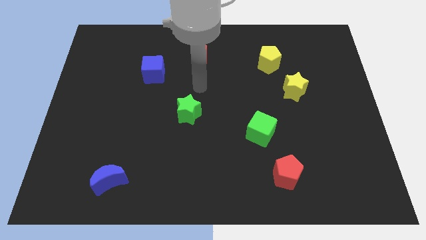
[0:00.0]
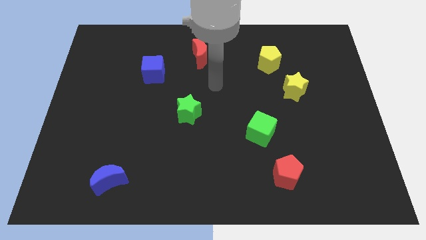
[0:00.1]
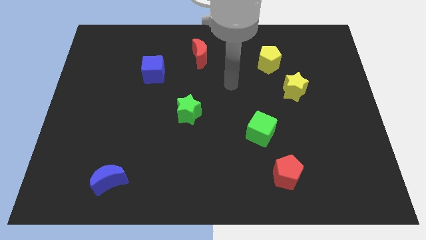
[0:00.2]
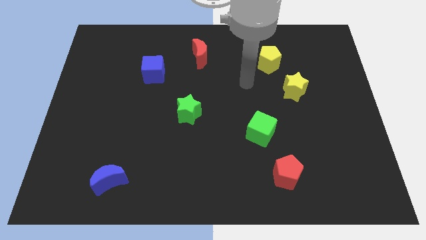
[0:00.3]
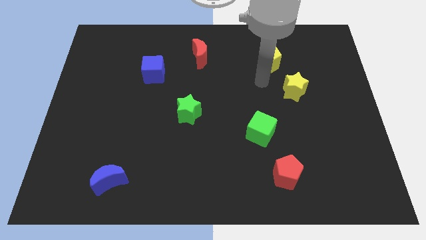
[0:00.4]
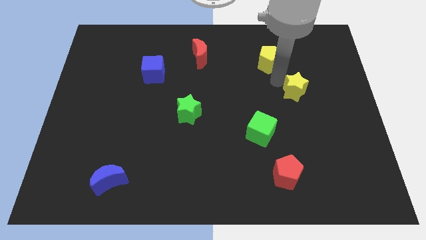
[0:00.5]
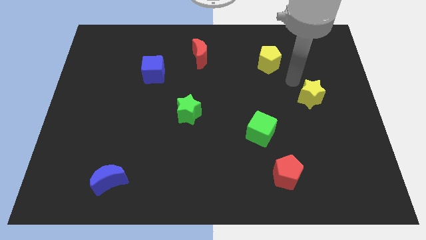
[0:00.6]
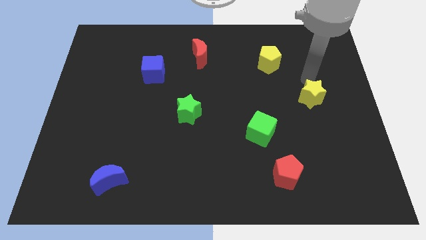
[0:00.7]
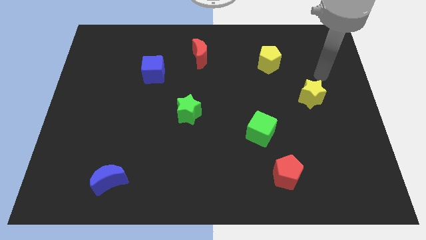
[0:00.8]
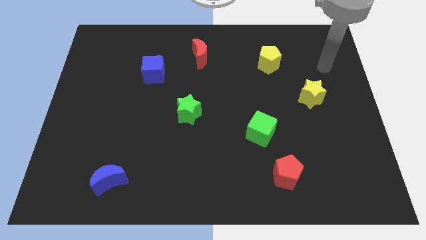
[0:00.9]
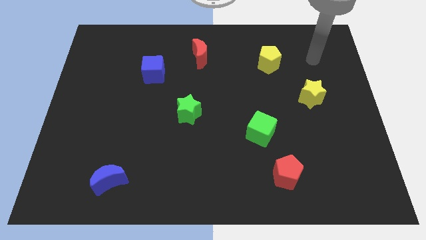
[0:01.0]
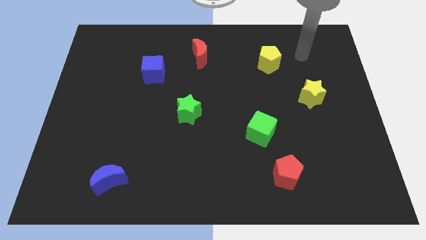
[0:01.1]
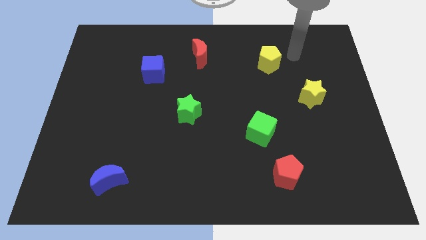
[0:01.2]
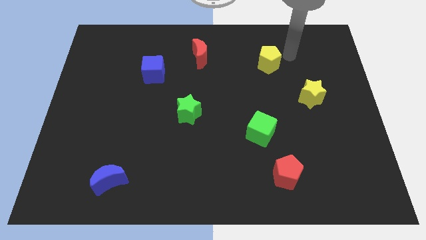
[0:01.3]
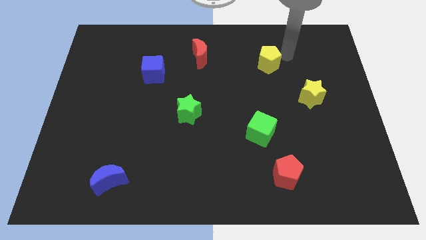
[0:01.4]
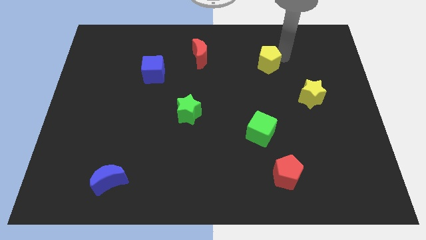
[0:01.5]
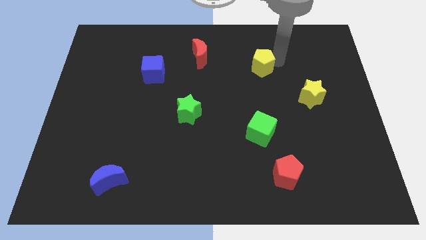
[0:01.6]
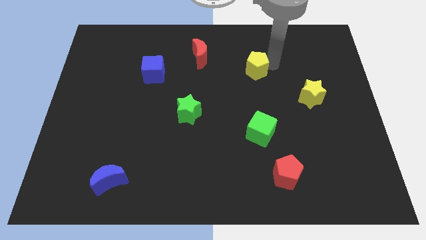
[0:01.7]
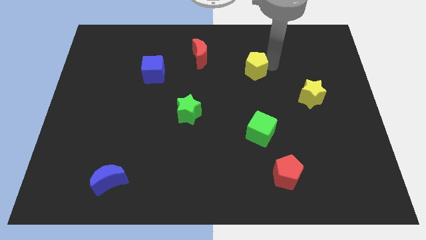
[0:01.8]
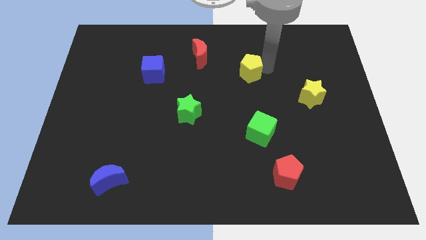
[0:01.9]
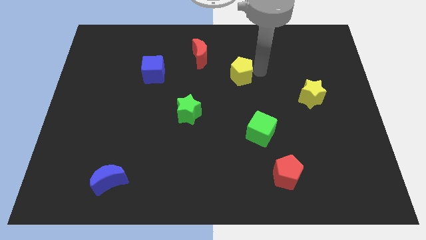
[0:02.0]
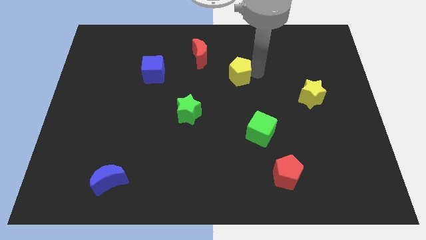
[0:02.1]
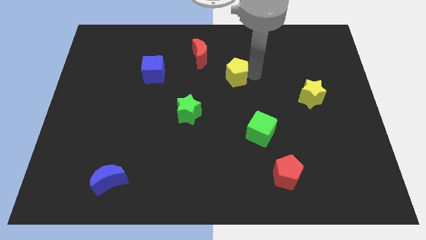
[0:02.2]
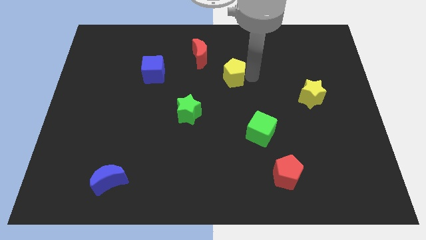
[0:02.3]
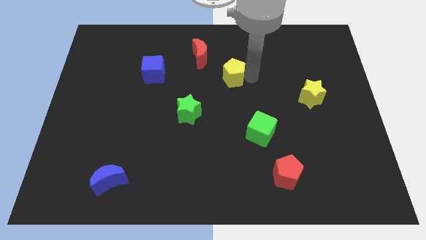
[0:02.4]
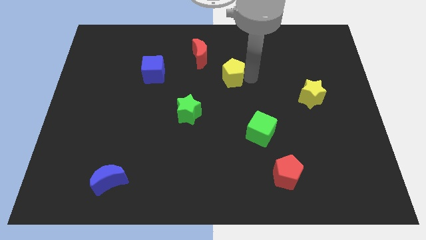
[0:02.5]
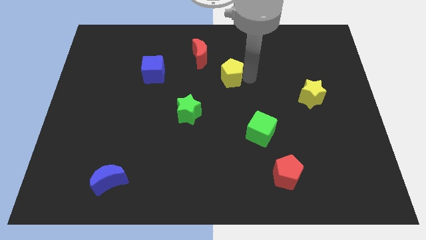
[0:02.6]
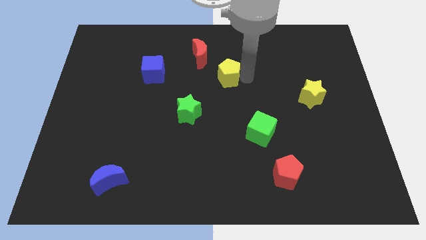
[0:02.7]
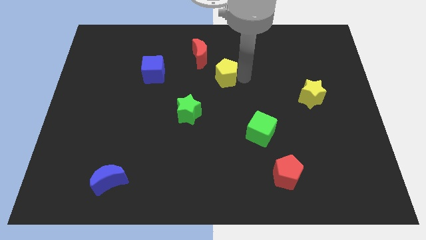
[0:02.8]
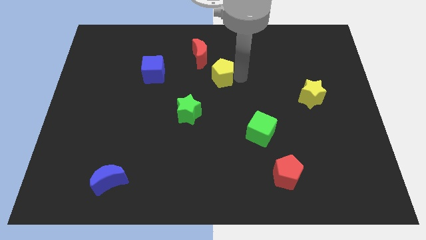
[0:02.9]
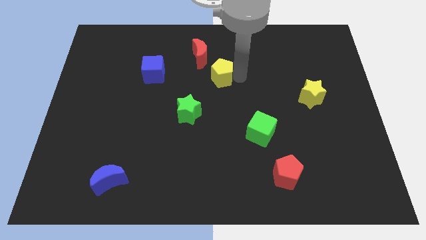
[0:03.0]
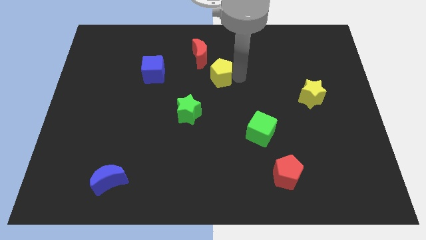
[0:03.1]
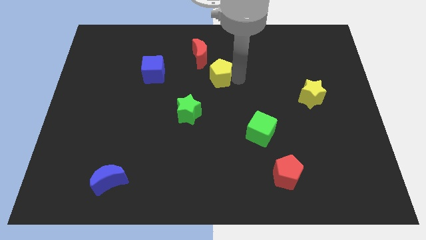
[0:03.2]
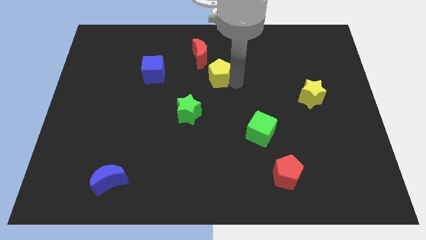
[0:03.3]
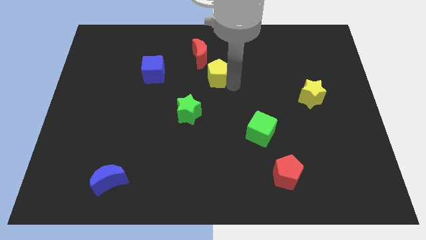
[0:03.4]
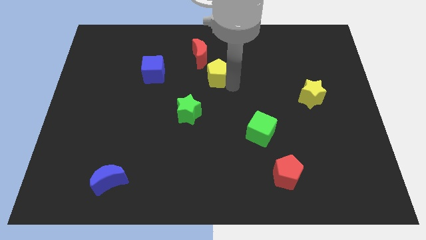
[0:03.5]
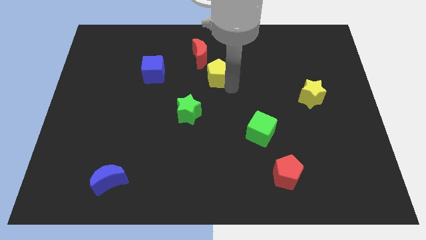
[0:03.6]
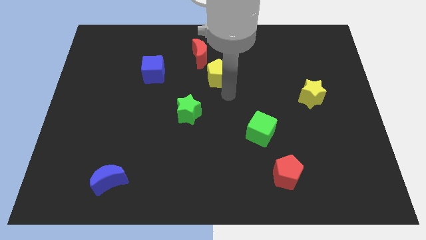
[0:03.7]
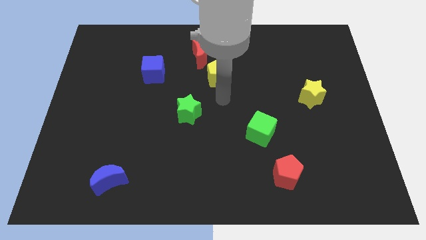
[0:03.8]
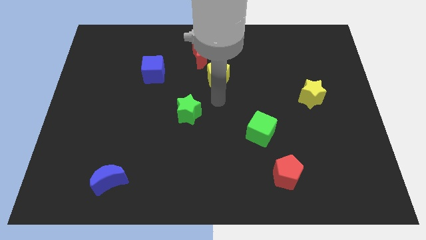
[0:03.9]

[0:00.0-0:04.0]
move the yellow pentagon right below the red moon

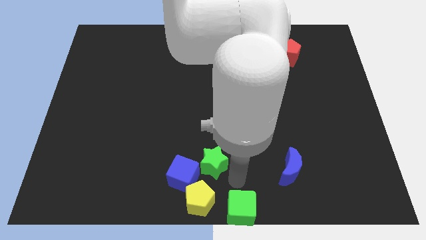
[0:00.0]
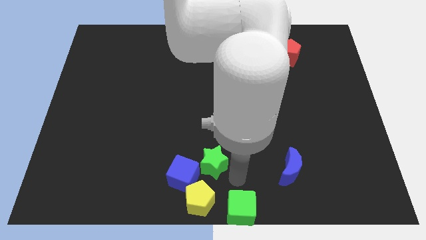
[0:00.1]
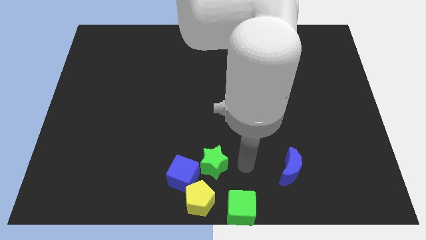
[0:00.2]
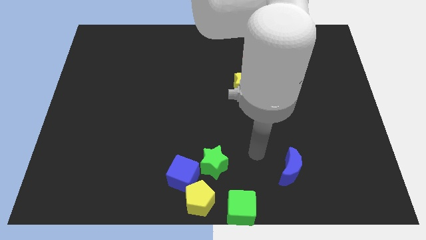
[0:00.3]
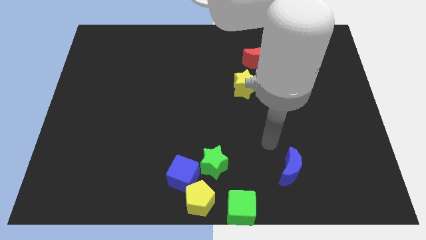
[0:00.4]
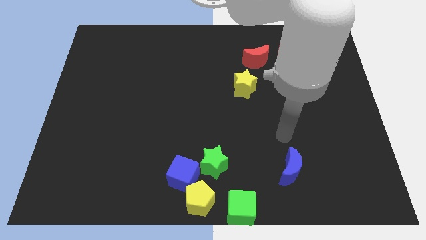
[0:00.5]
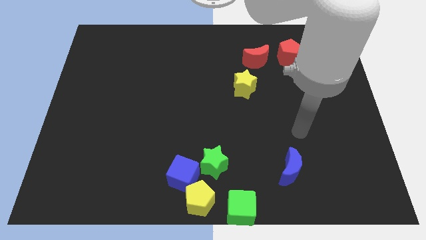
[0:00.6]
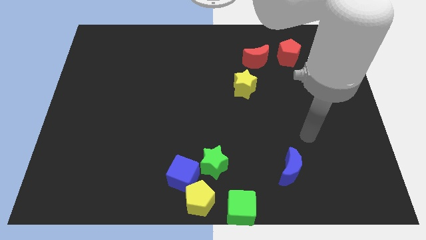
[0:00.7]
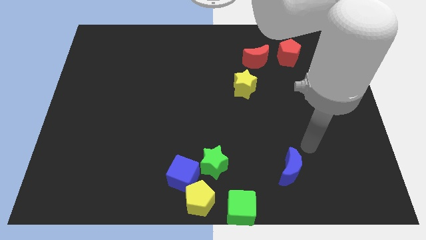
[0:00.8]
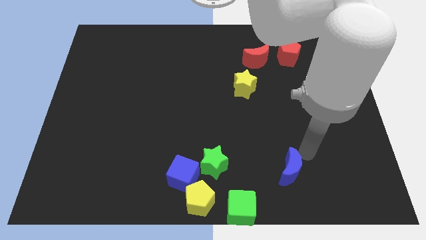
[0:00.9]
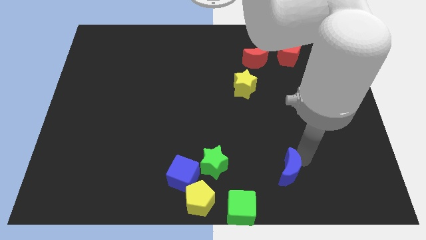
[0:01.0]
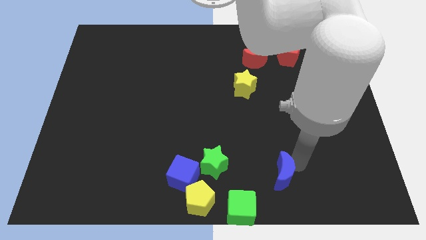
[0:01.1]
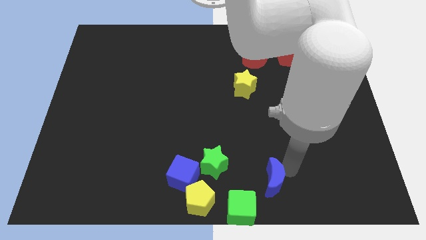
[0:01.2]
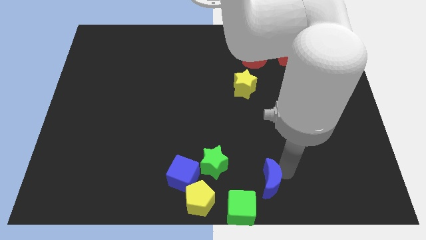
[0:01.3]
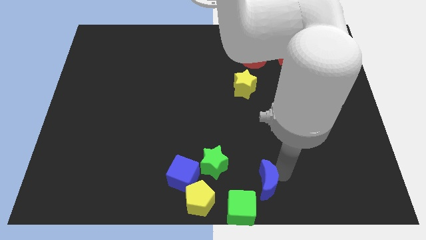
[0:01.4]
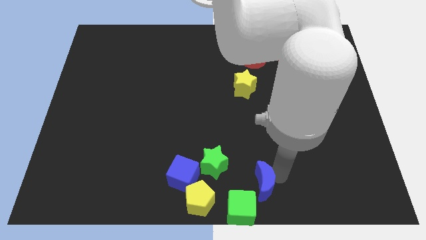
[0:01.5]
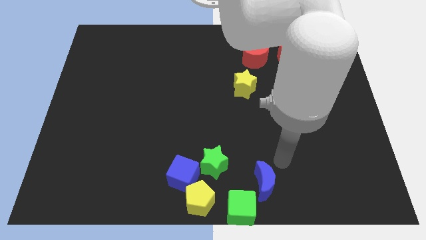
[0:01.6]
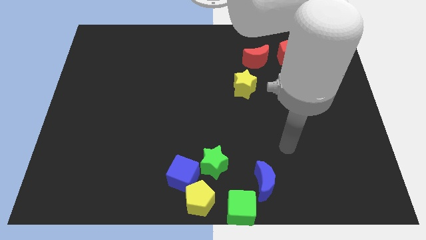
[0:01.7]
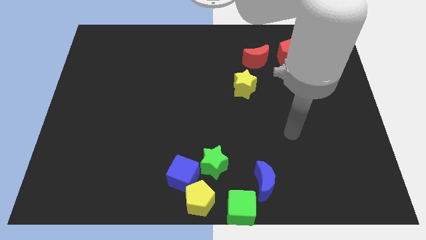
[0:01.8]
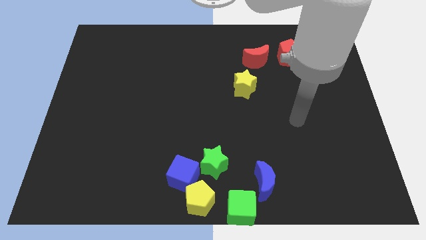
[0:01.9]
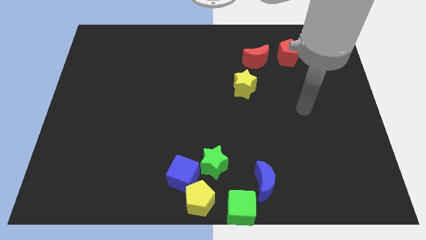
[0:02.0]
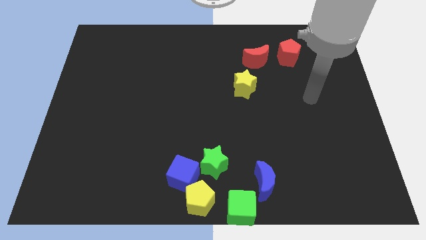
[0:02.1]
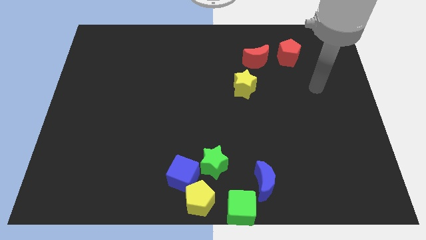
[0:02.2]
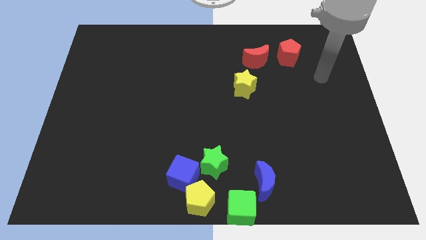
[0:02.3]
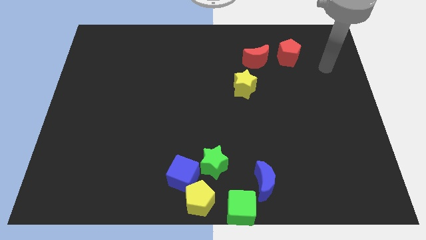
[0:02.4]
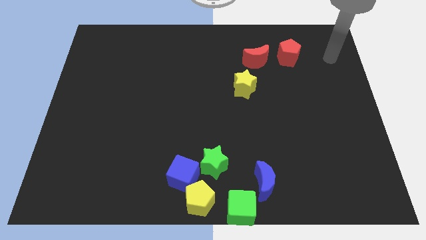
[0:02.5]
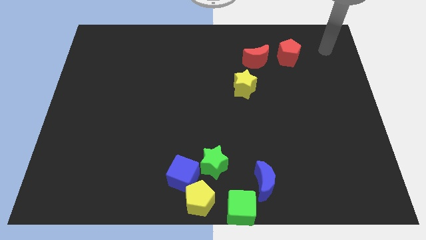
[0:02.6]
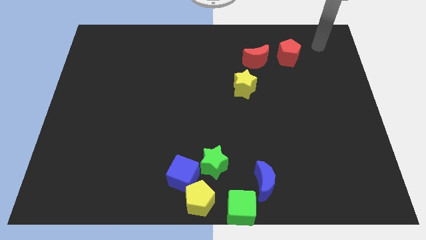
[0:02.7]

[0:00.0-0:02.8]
push the blue moon closer to the green cube

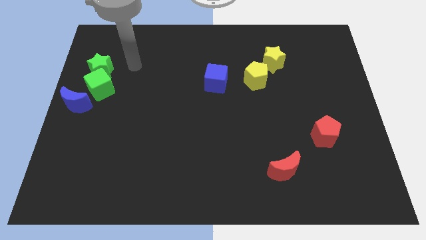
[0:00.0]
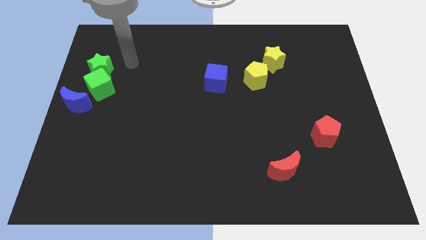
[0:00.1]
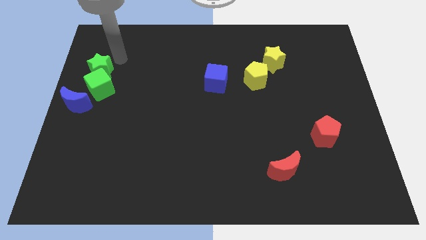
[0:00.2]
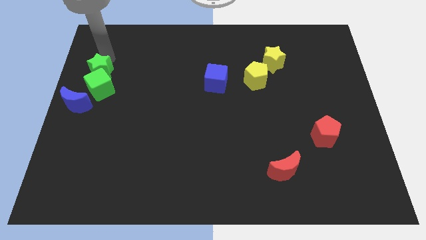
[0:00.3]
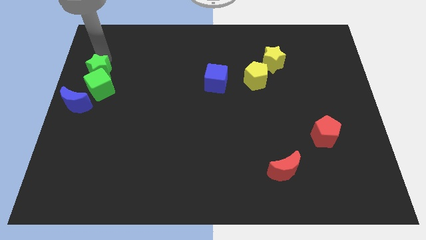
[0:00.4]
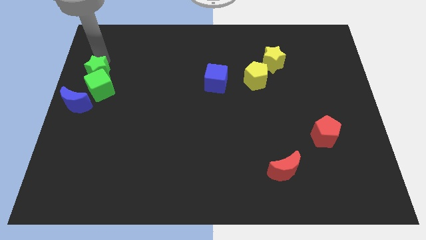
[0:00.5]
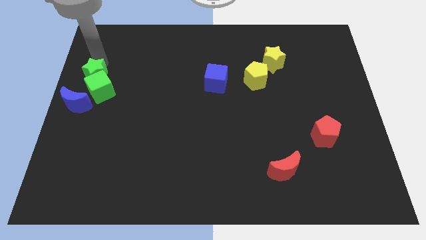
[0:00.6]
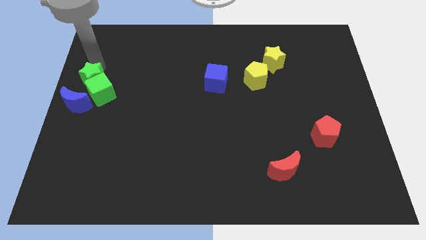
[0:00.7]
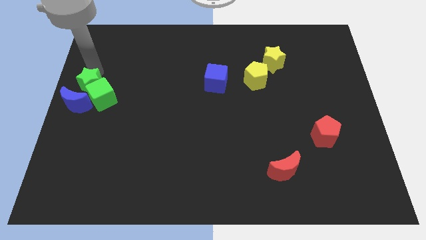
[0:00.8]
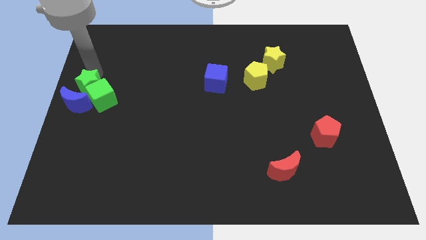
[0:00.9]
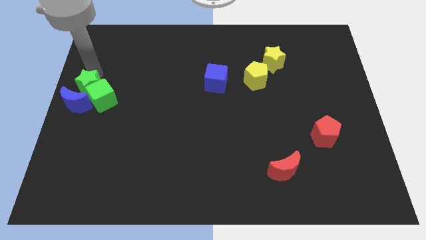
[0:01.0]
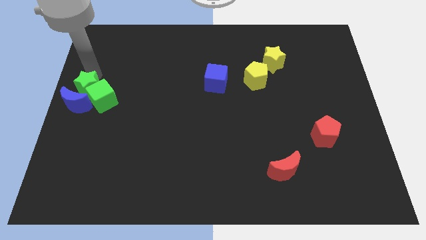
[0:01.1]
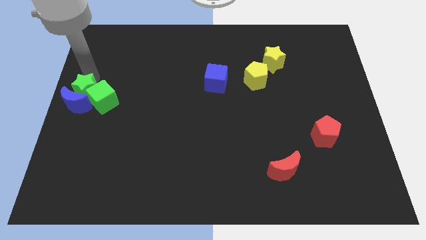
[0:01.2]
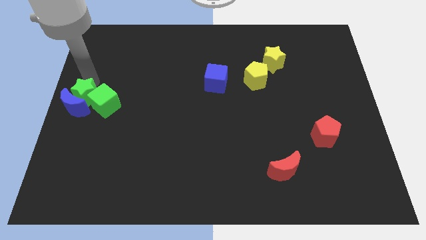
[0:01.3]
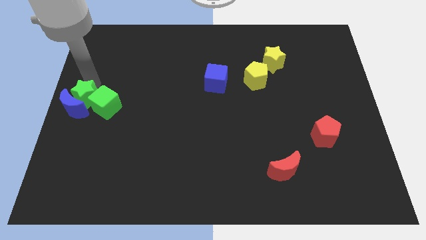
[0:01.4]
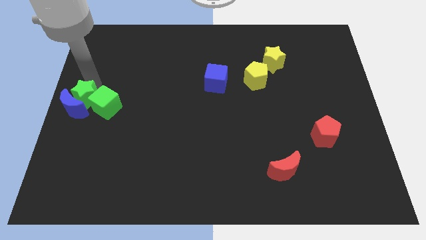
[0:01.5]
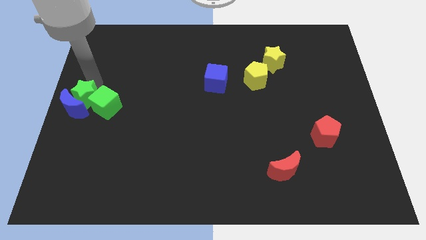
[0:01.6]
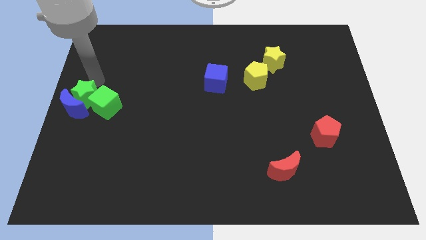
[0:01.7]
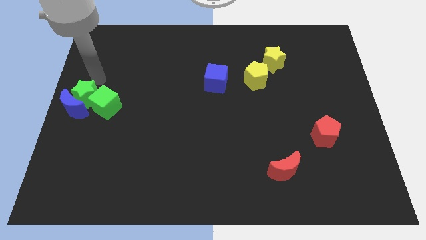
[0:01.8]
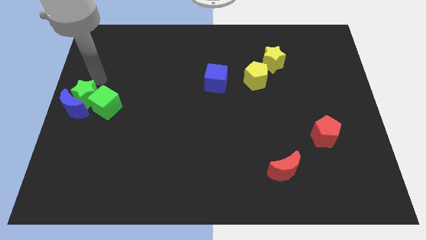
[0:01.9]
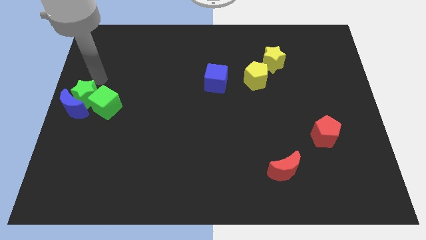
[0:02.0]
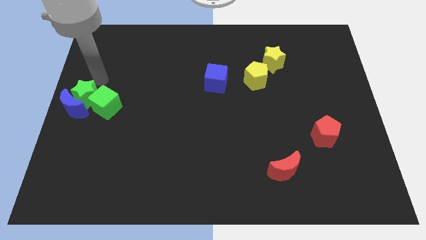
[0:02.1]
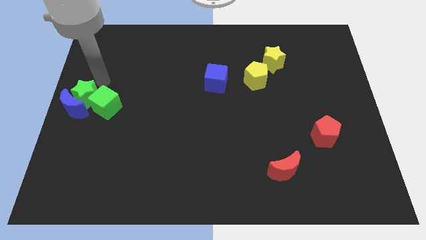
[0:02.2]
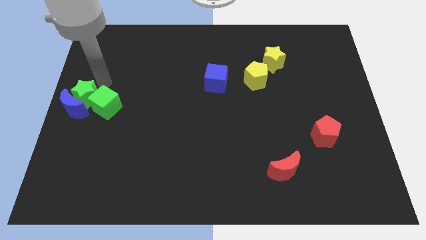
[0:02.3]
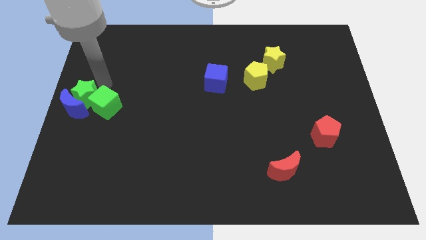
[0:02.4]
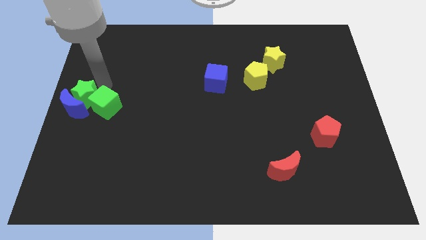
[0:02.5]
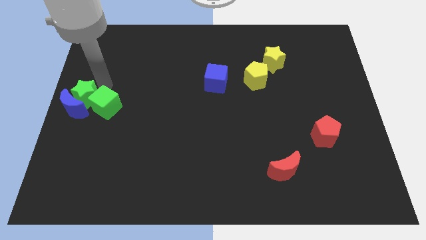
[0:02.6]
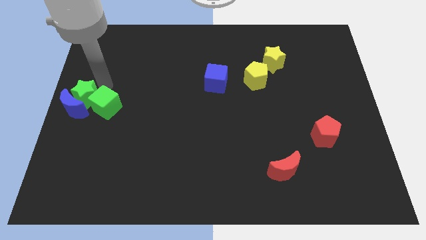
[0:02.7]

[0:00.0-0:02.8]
push the green star into the top of the blue crescent
